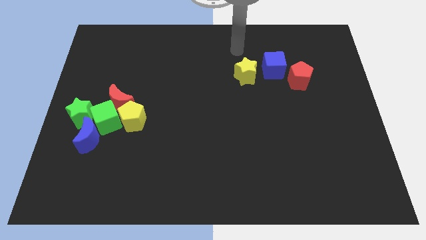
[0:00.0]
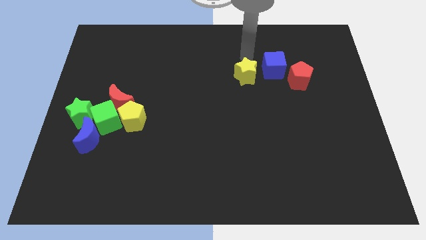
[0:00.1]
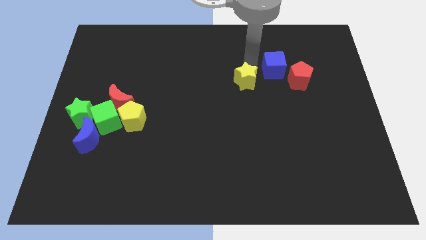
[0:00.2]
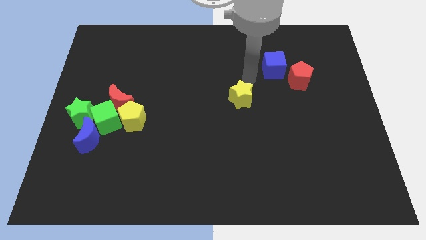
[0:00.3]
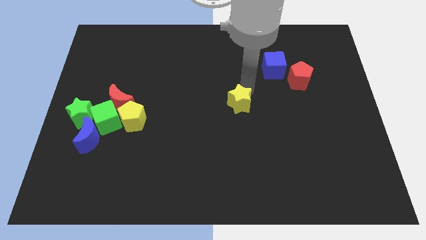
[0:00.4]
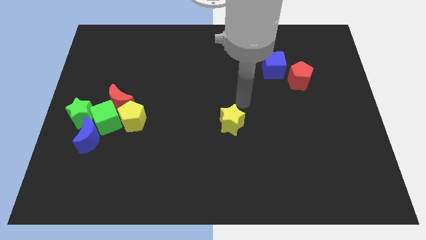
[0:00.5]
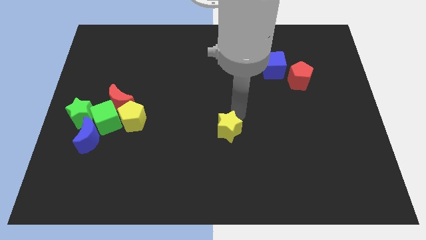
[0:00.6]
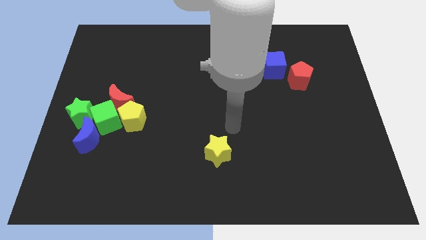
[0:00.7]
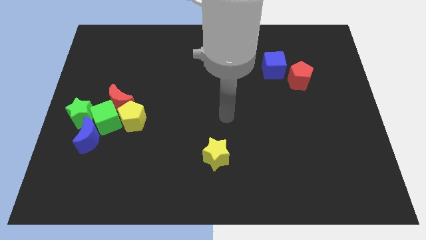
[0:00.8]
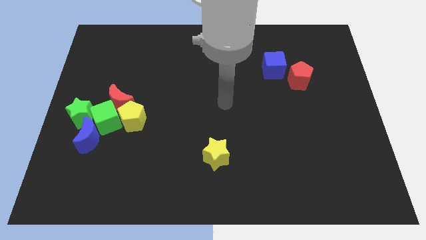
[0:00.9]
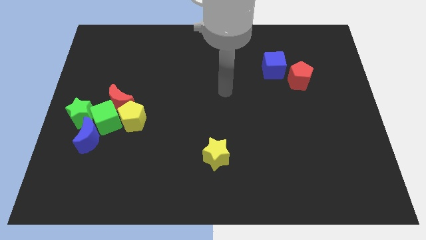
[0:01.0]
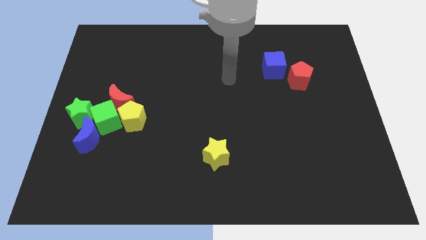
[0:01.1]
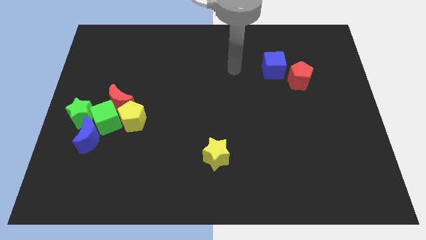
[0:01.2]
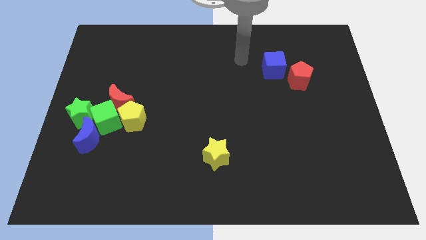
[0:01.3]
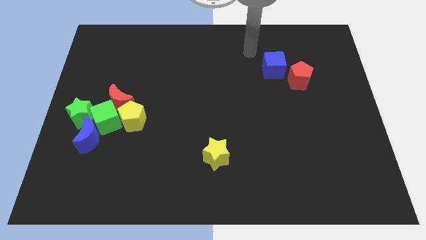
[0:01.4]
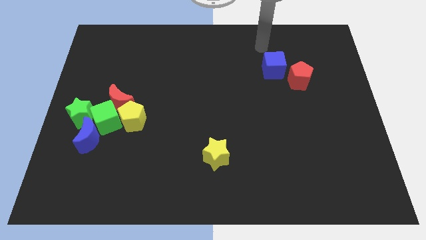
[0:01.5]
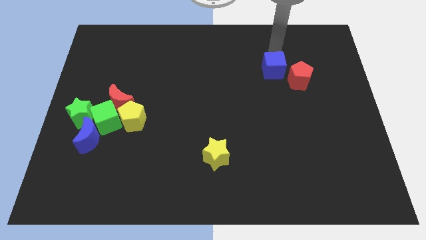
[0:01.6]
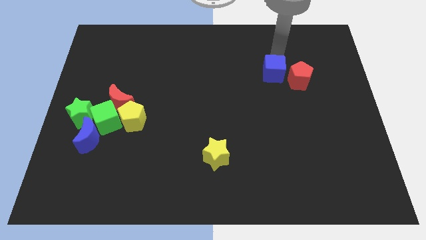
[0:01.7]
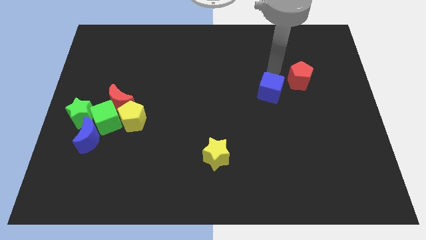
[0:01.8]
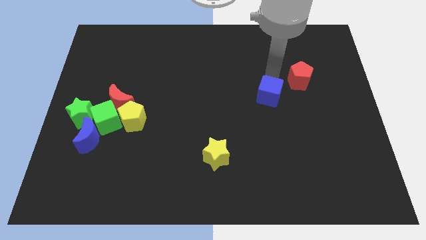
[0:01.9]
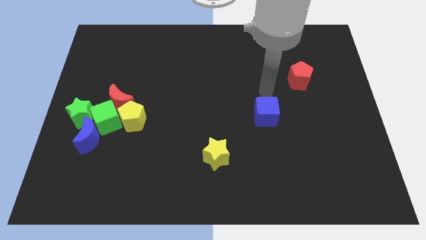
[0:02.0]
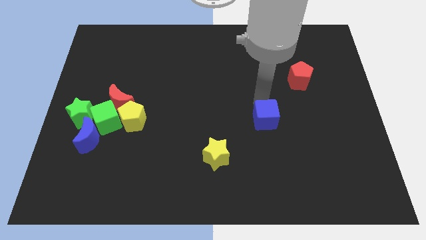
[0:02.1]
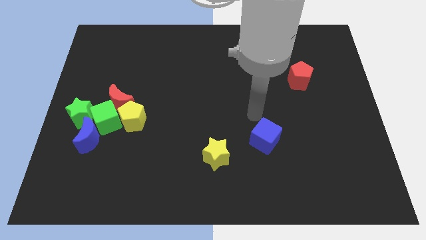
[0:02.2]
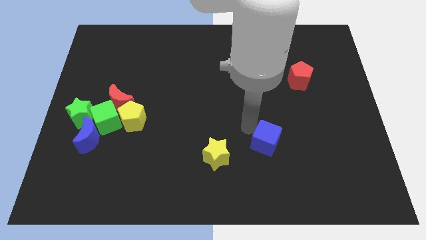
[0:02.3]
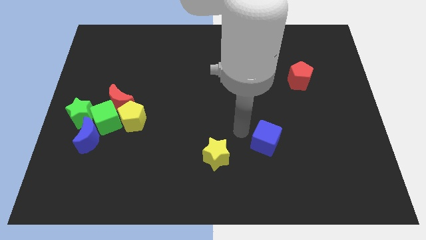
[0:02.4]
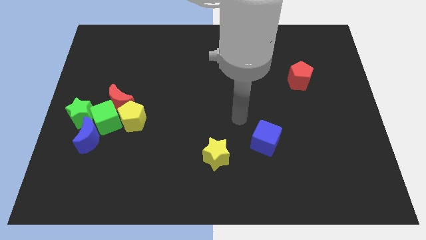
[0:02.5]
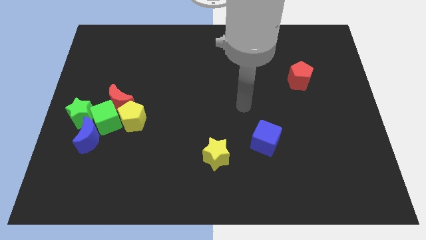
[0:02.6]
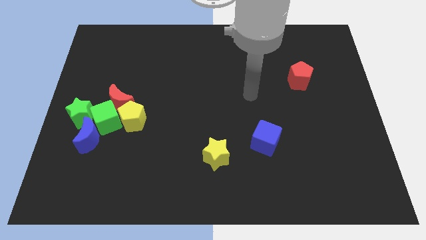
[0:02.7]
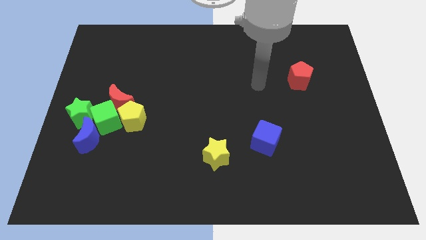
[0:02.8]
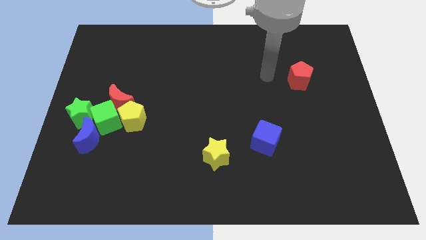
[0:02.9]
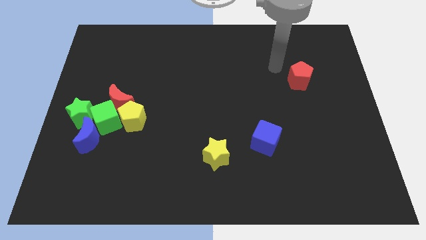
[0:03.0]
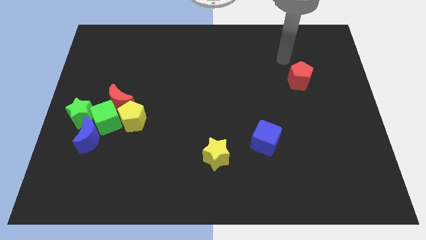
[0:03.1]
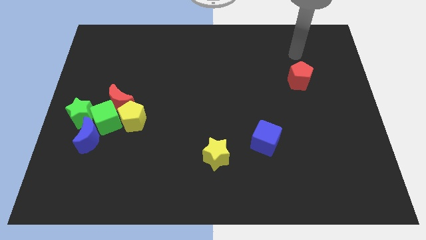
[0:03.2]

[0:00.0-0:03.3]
push the blue cube and the yellow star towards the bottom

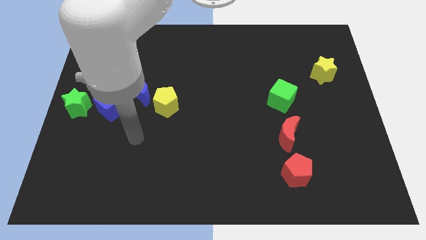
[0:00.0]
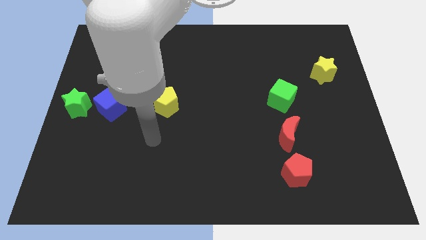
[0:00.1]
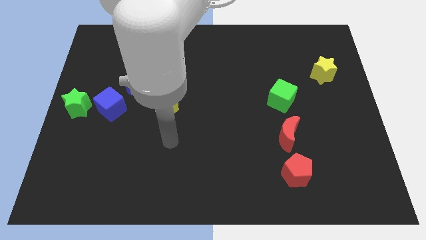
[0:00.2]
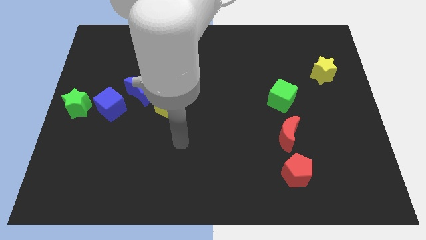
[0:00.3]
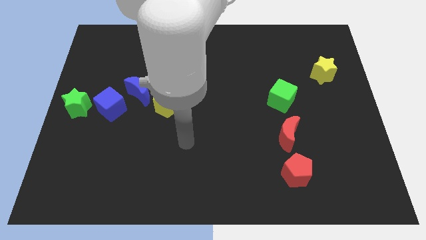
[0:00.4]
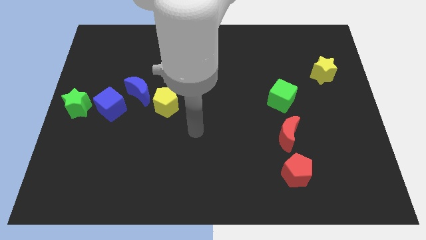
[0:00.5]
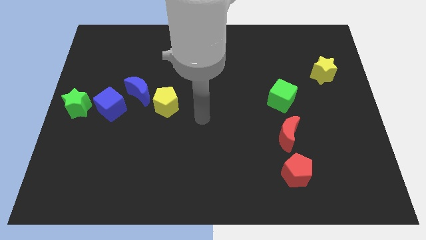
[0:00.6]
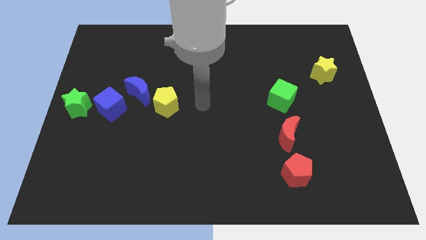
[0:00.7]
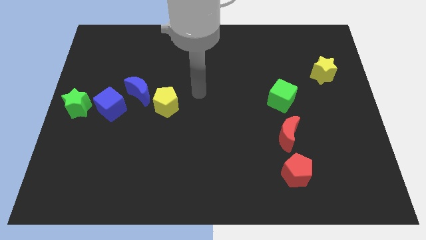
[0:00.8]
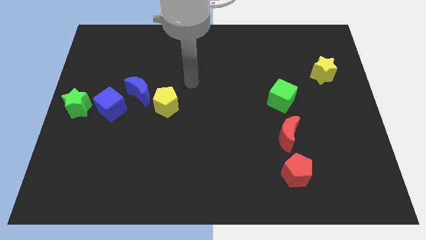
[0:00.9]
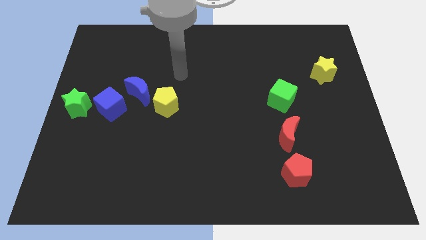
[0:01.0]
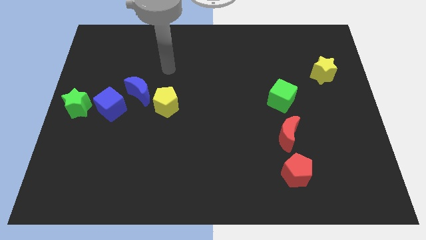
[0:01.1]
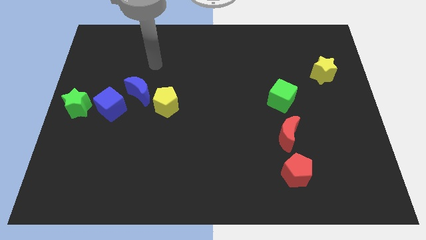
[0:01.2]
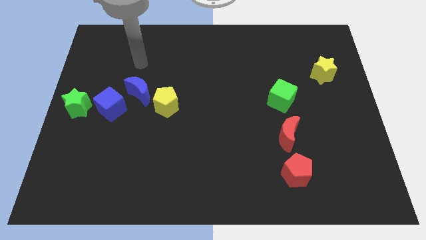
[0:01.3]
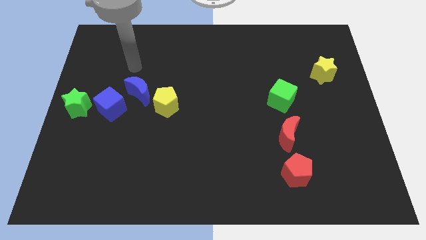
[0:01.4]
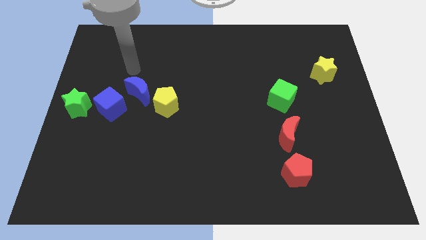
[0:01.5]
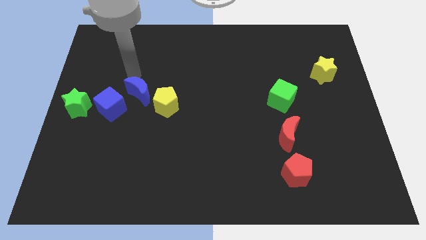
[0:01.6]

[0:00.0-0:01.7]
point the arm above the blue crescent

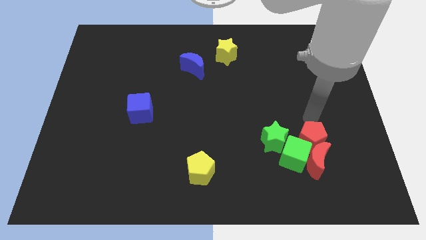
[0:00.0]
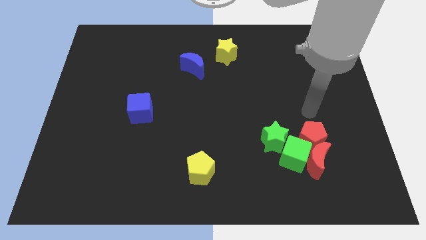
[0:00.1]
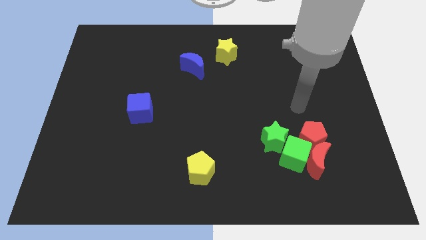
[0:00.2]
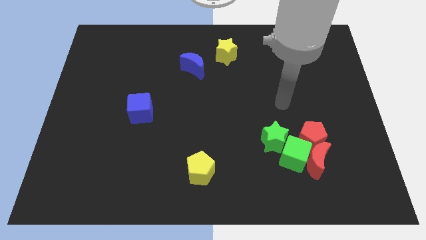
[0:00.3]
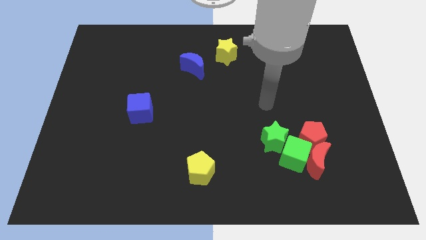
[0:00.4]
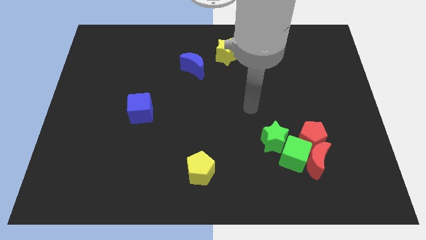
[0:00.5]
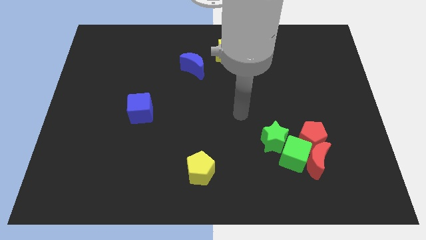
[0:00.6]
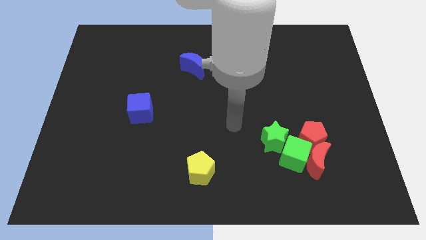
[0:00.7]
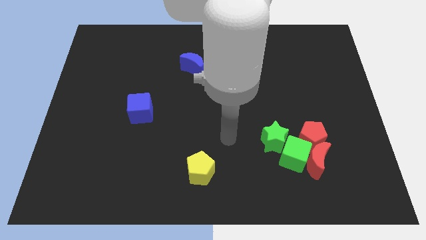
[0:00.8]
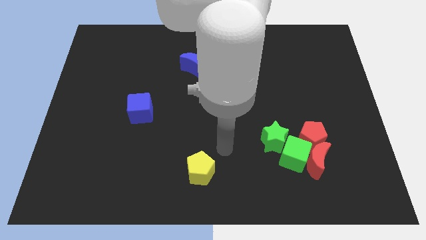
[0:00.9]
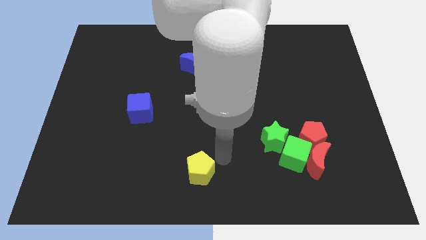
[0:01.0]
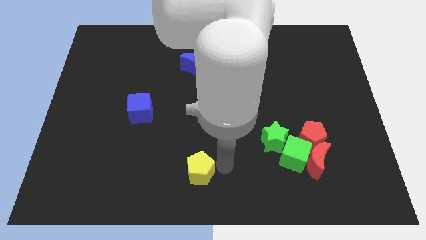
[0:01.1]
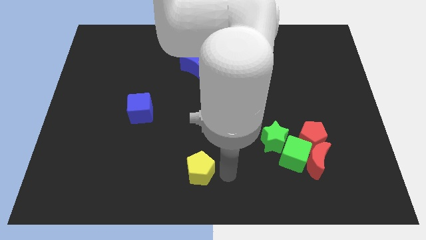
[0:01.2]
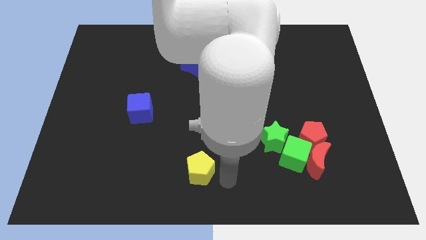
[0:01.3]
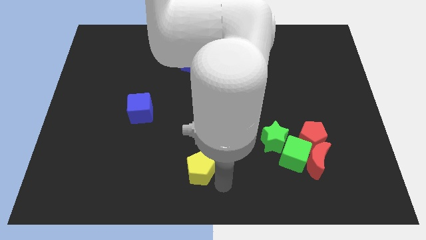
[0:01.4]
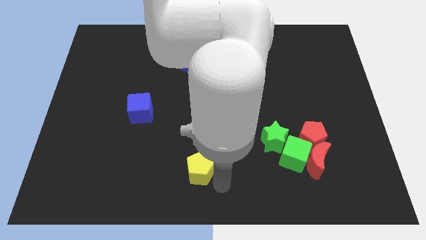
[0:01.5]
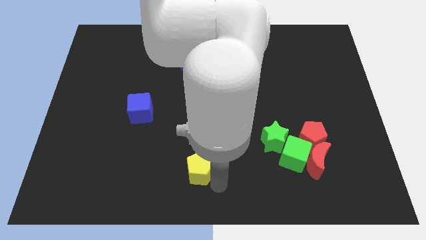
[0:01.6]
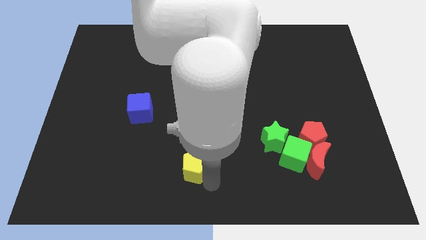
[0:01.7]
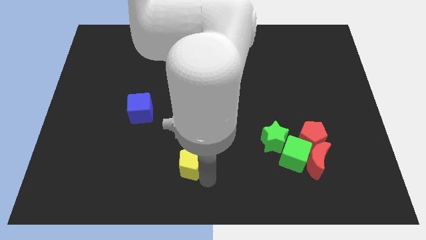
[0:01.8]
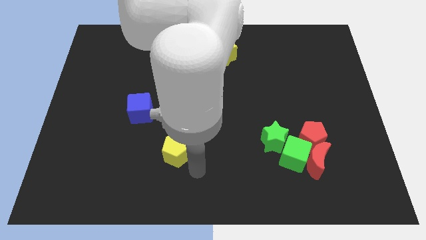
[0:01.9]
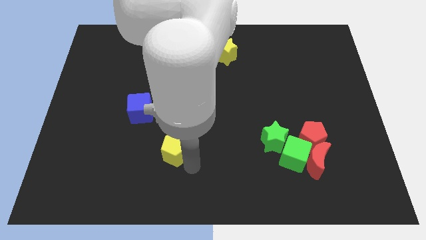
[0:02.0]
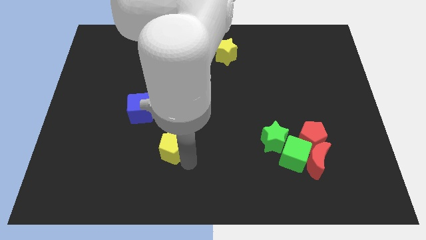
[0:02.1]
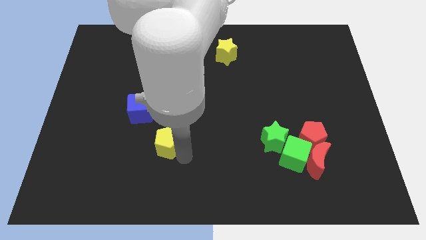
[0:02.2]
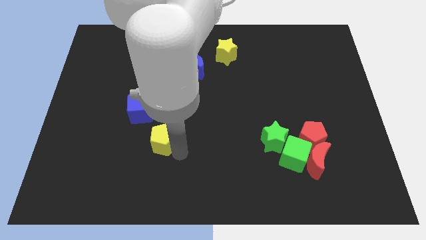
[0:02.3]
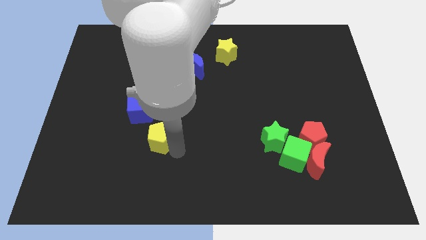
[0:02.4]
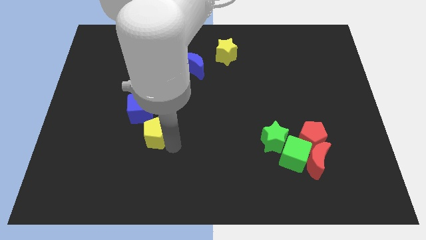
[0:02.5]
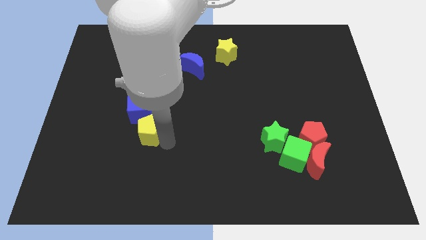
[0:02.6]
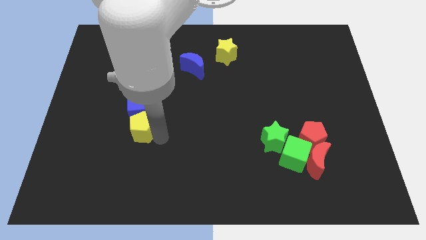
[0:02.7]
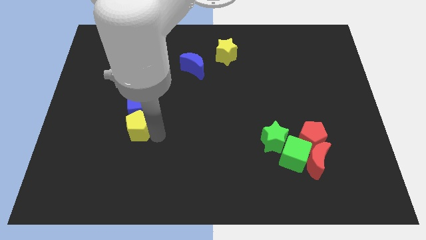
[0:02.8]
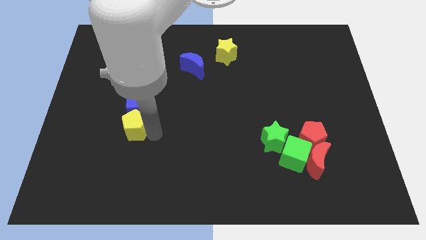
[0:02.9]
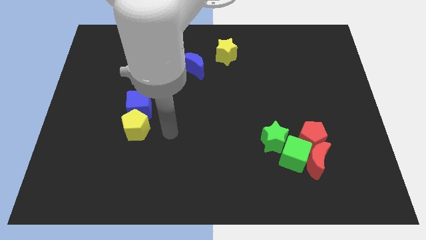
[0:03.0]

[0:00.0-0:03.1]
put the yellow pentagon at the bottom of the blue cube

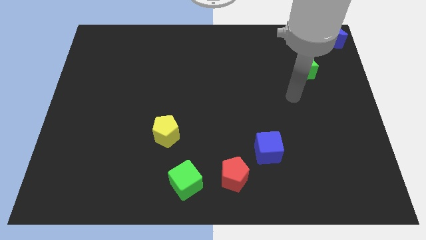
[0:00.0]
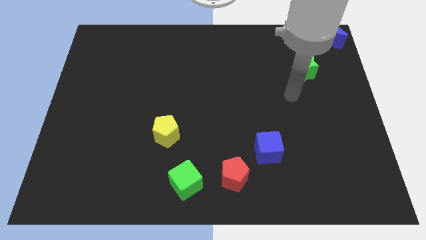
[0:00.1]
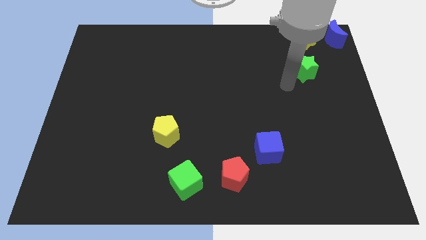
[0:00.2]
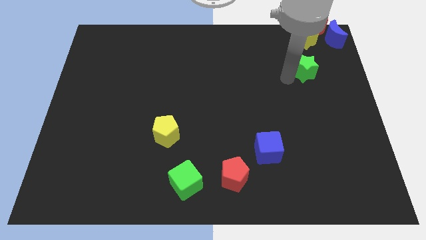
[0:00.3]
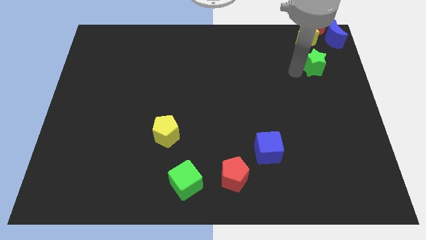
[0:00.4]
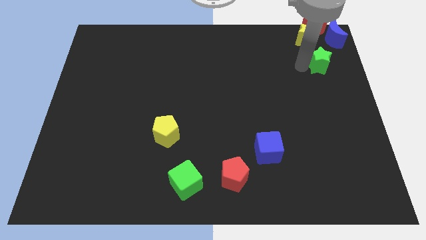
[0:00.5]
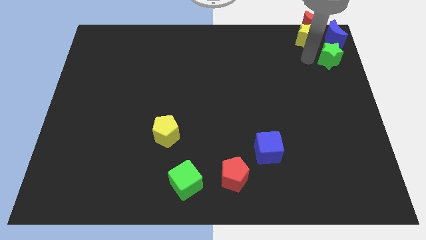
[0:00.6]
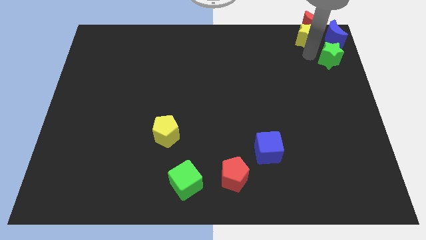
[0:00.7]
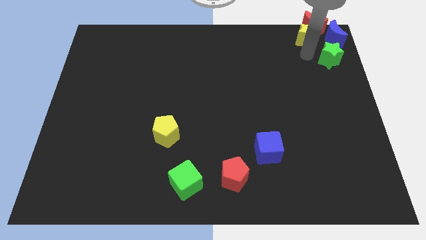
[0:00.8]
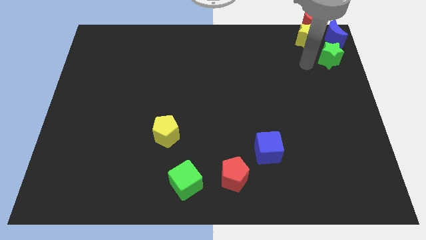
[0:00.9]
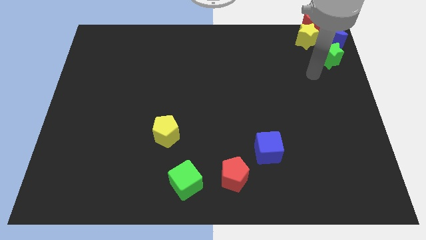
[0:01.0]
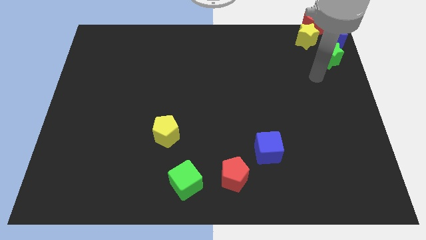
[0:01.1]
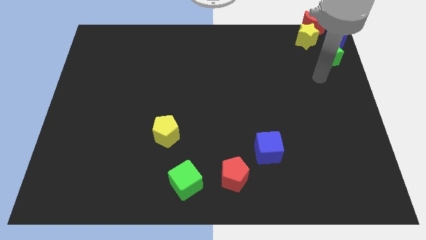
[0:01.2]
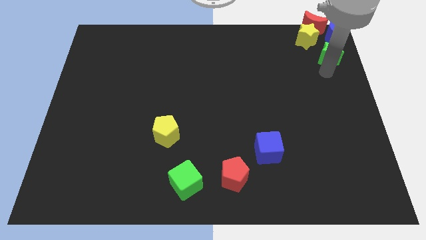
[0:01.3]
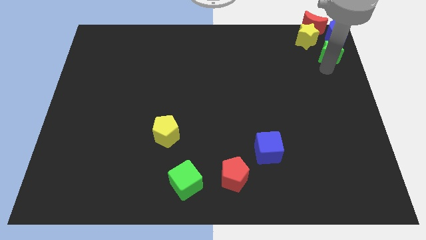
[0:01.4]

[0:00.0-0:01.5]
move the green star to the bottom of the blue crescent
